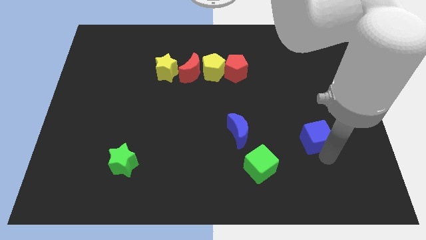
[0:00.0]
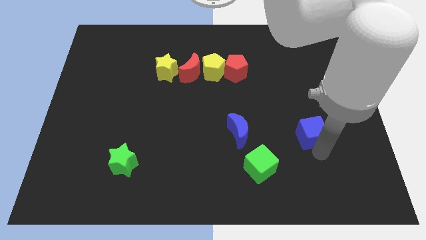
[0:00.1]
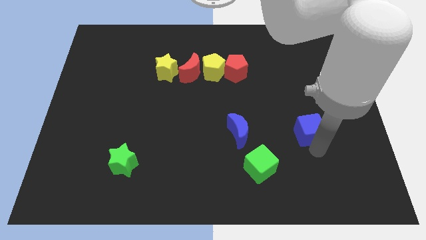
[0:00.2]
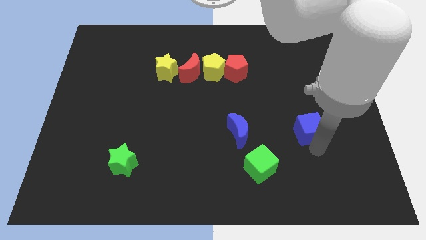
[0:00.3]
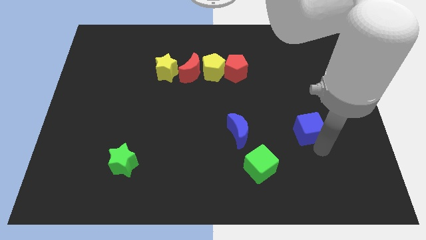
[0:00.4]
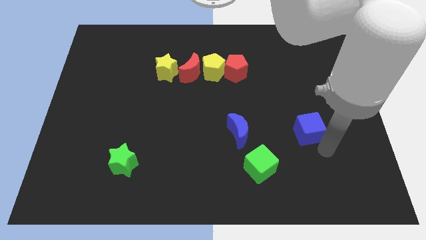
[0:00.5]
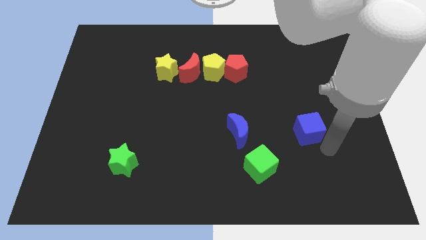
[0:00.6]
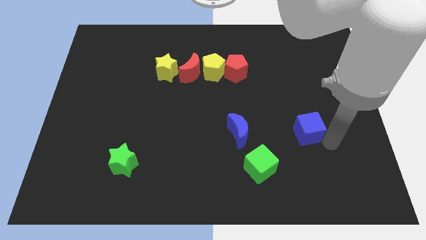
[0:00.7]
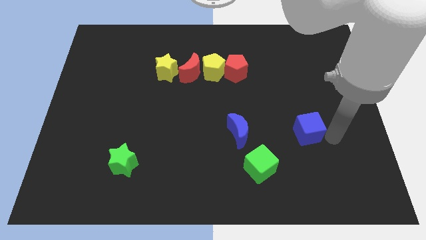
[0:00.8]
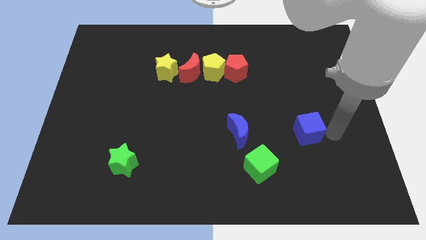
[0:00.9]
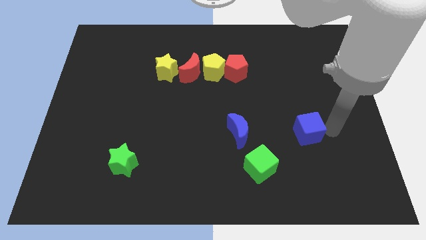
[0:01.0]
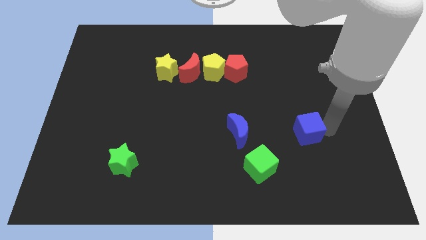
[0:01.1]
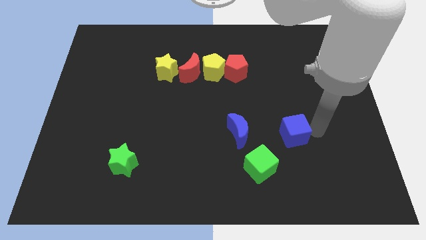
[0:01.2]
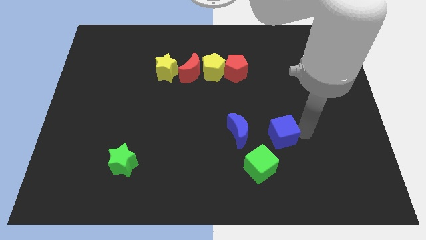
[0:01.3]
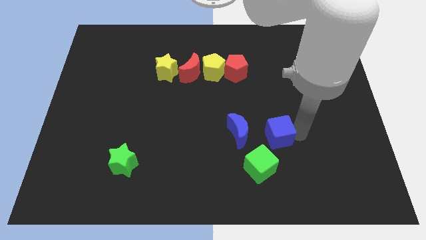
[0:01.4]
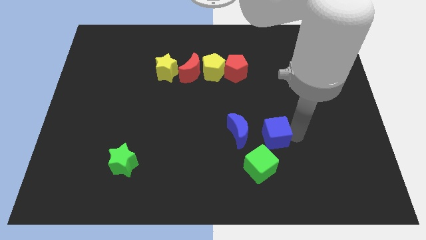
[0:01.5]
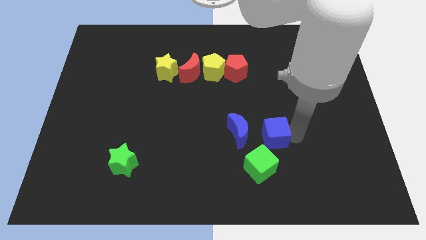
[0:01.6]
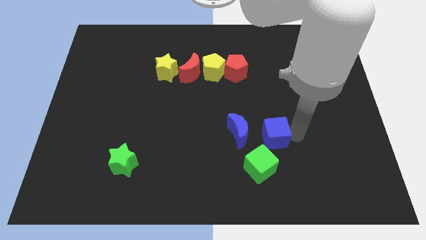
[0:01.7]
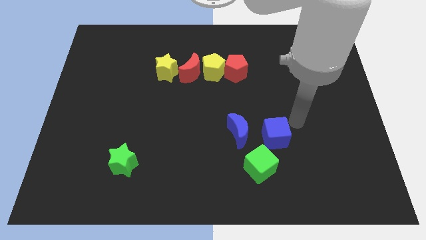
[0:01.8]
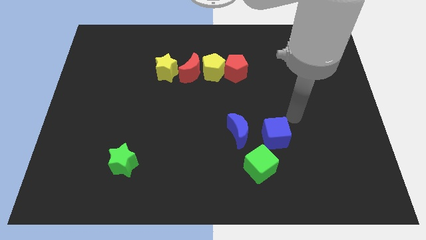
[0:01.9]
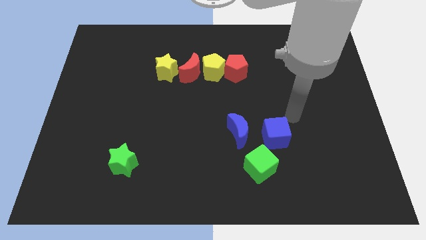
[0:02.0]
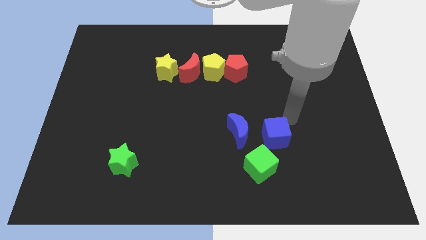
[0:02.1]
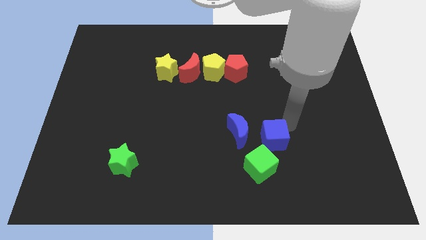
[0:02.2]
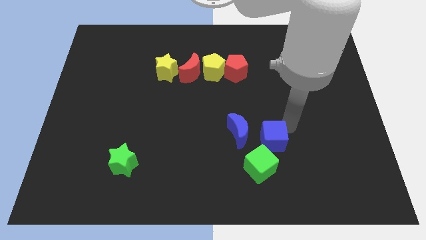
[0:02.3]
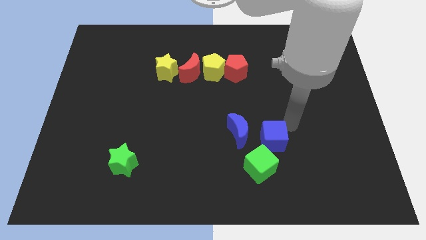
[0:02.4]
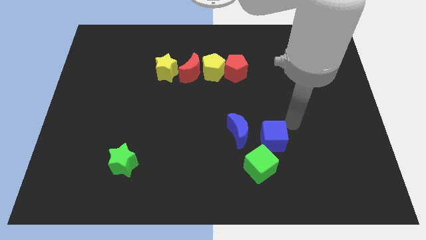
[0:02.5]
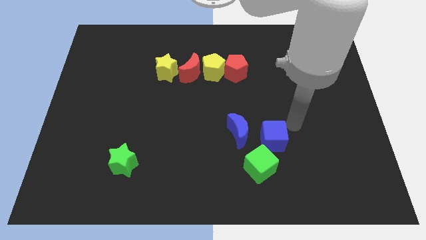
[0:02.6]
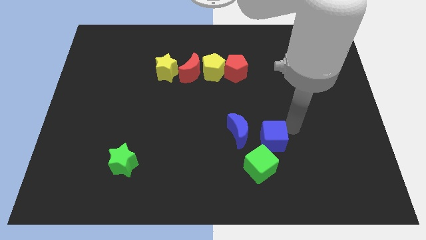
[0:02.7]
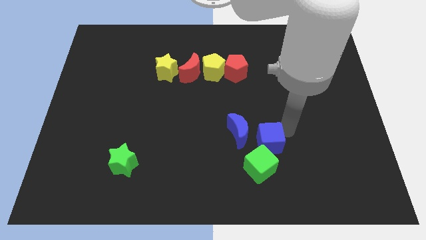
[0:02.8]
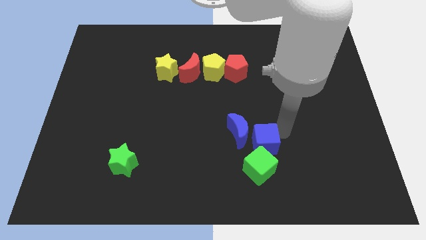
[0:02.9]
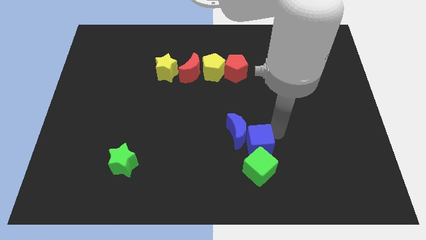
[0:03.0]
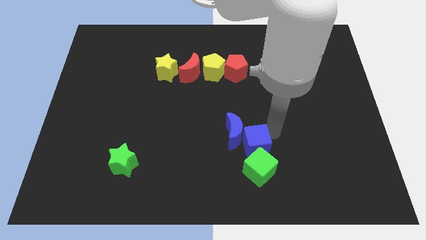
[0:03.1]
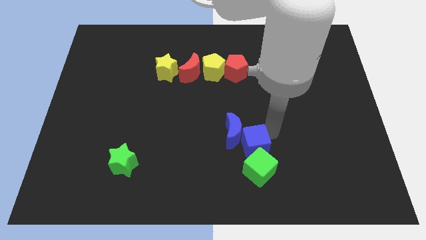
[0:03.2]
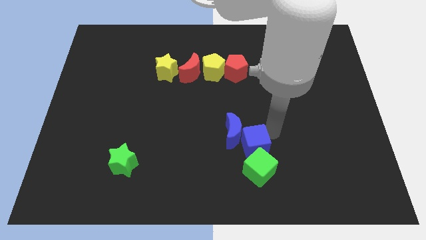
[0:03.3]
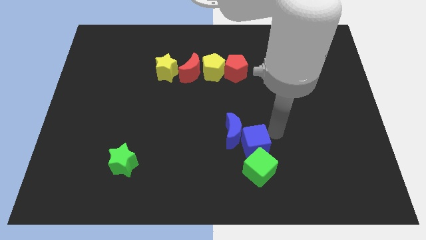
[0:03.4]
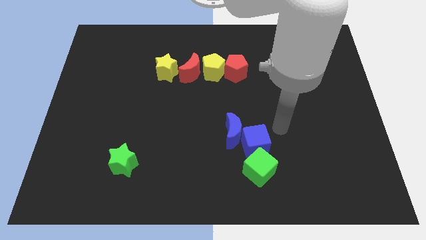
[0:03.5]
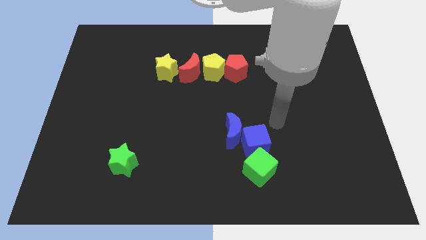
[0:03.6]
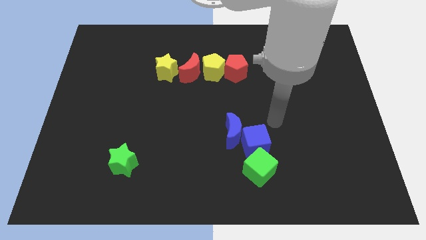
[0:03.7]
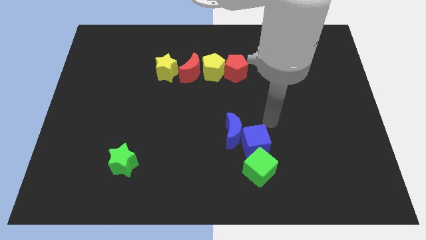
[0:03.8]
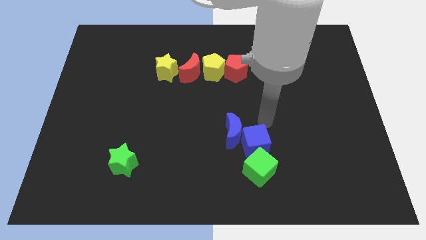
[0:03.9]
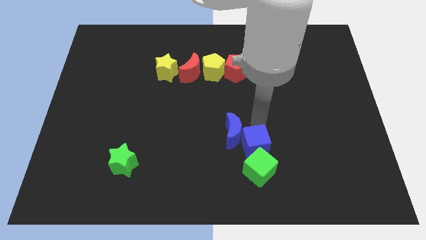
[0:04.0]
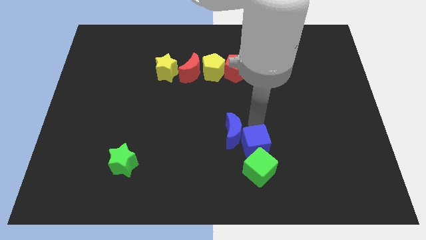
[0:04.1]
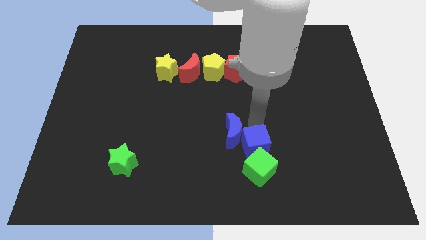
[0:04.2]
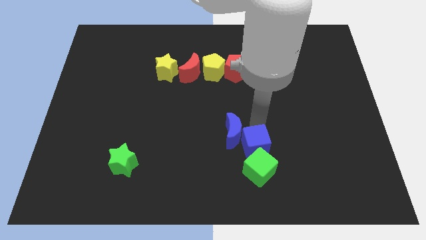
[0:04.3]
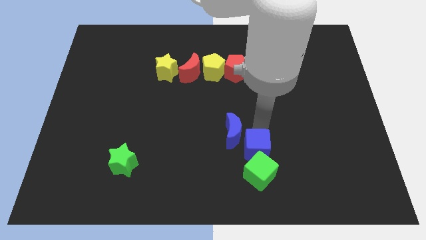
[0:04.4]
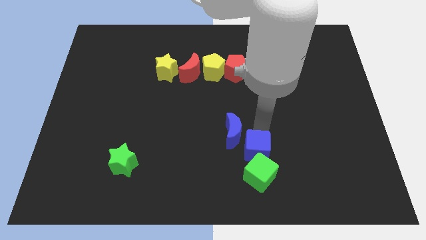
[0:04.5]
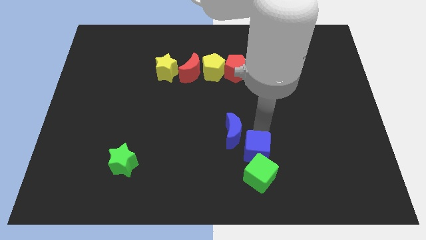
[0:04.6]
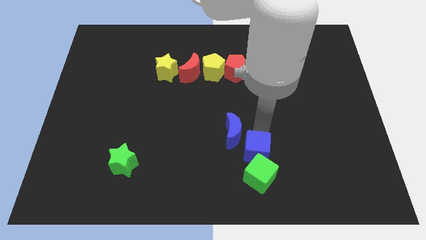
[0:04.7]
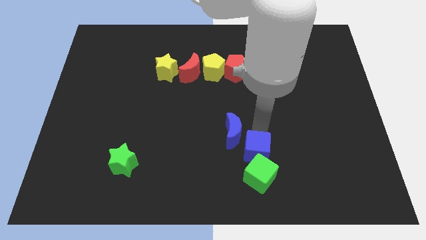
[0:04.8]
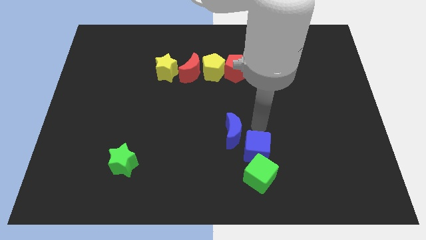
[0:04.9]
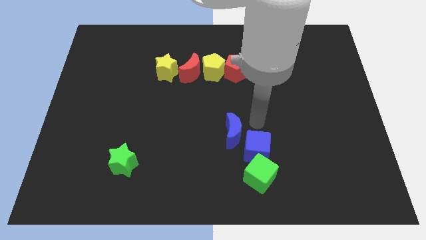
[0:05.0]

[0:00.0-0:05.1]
attach the blue cube to blue moon and green star

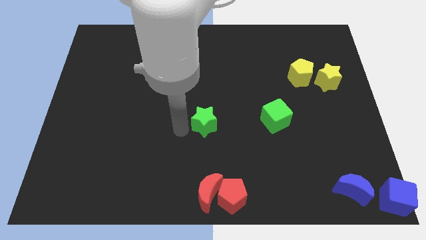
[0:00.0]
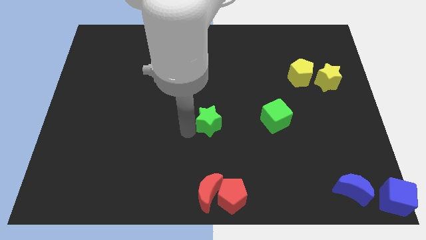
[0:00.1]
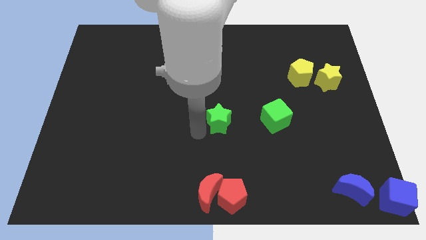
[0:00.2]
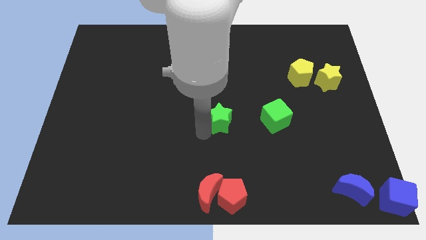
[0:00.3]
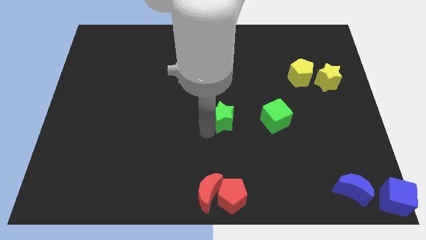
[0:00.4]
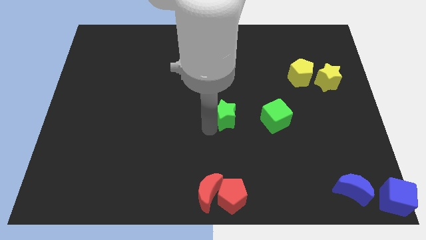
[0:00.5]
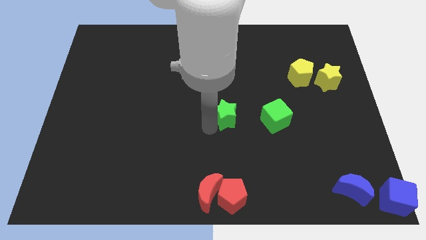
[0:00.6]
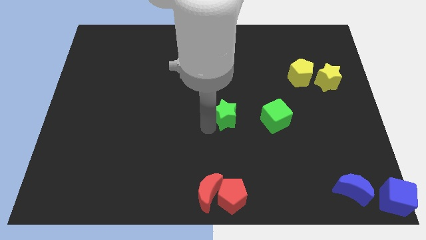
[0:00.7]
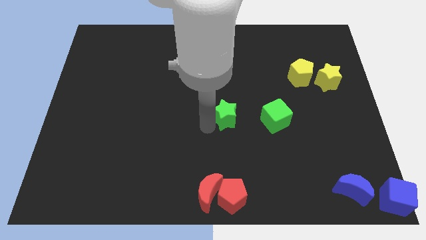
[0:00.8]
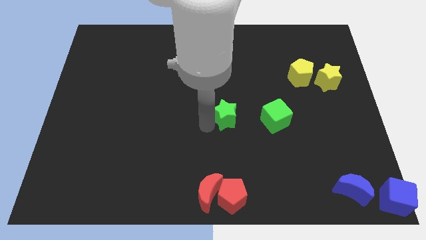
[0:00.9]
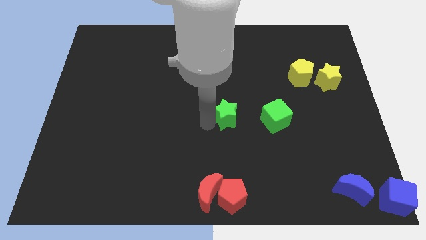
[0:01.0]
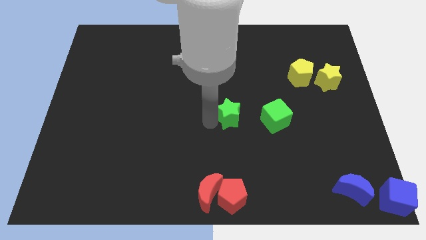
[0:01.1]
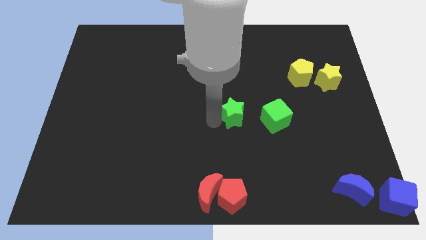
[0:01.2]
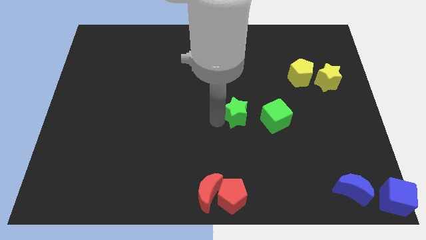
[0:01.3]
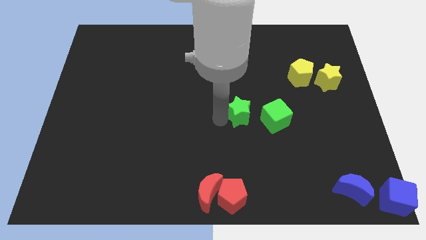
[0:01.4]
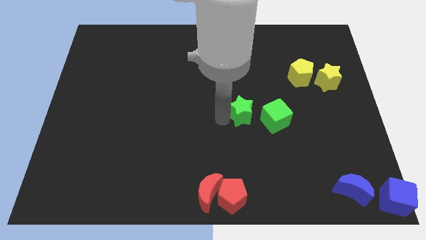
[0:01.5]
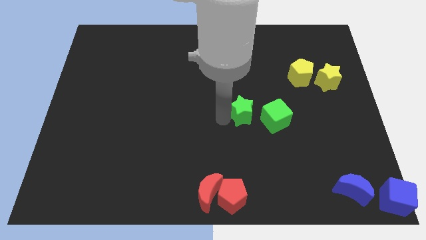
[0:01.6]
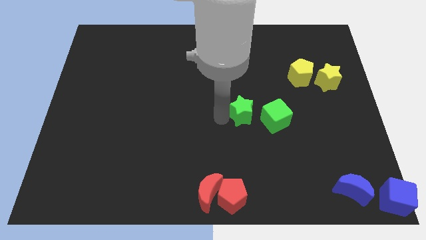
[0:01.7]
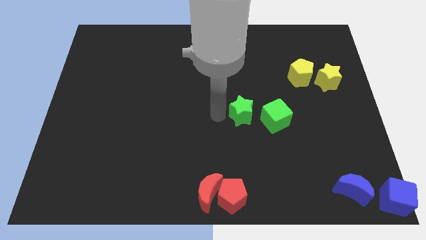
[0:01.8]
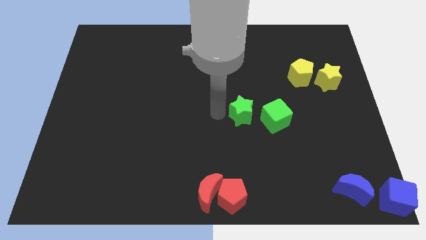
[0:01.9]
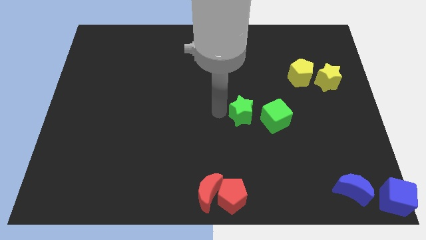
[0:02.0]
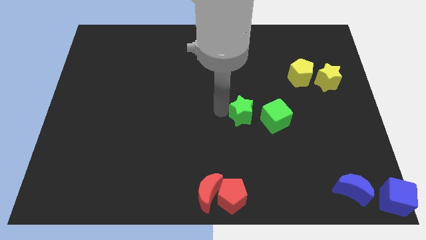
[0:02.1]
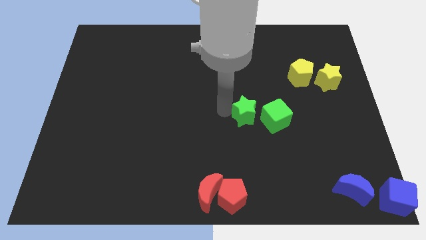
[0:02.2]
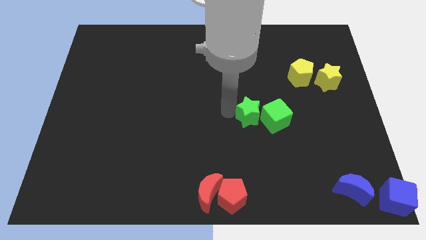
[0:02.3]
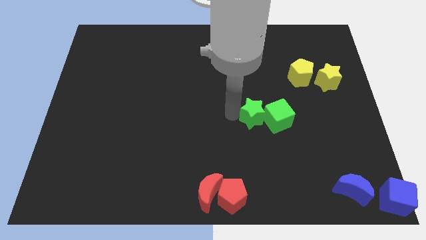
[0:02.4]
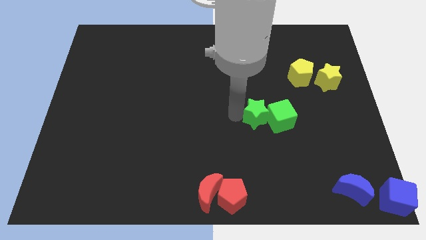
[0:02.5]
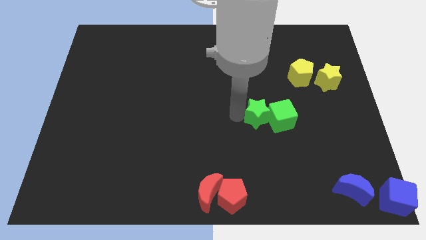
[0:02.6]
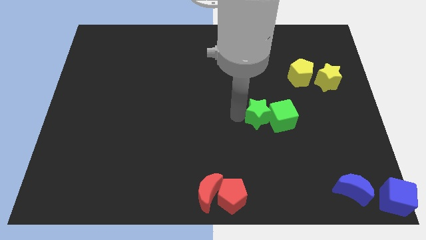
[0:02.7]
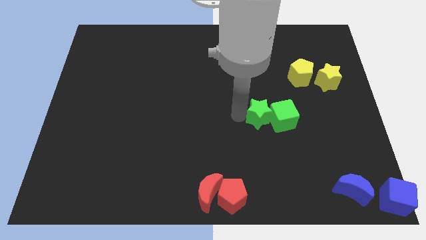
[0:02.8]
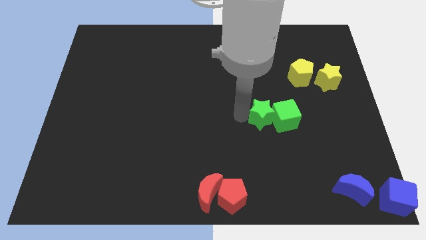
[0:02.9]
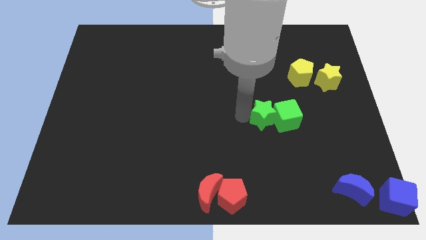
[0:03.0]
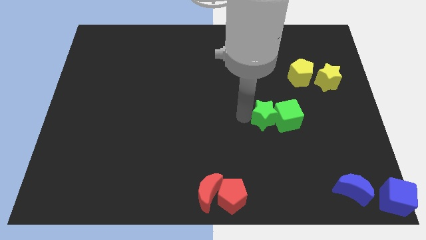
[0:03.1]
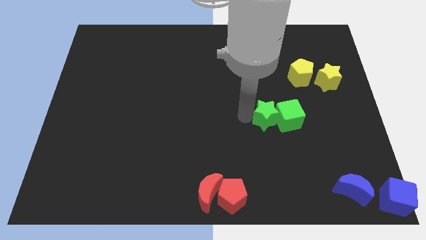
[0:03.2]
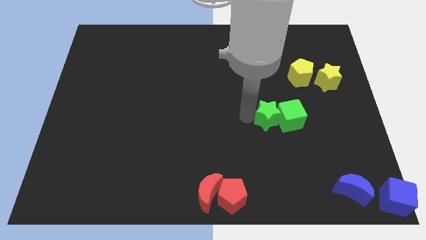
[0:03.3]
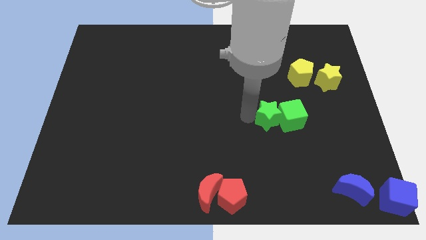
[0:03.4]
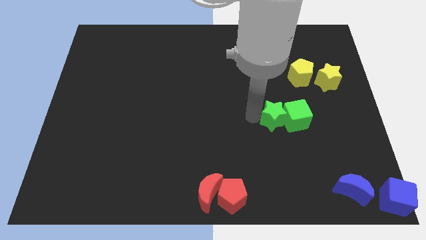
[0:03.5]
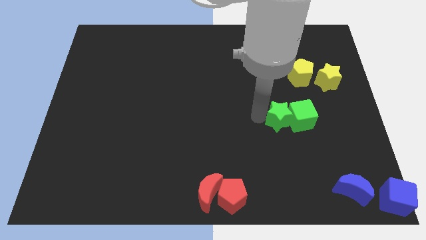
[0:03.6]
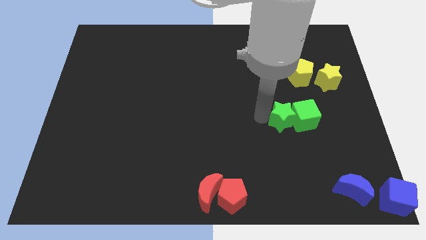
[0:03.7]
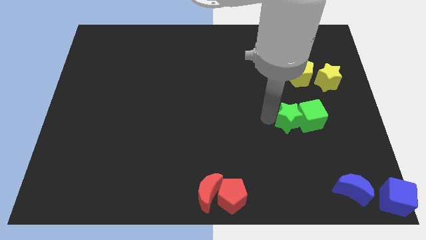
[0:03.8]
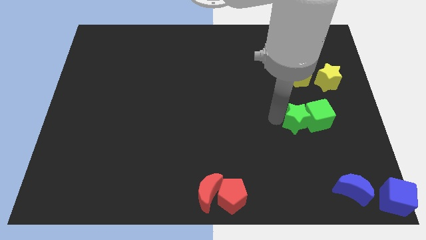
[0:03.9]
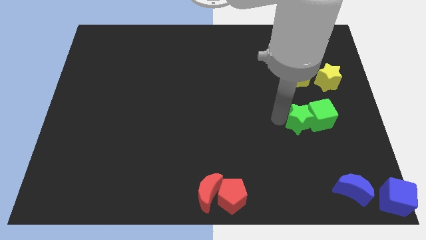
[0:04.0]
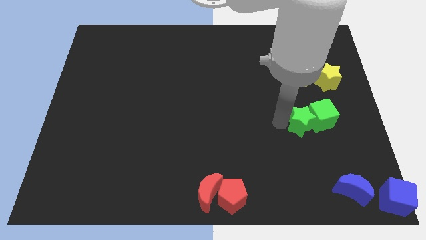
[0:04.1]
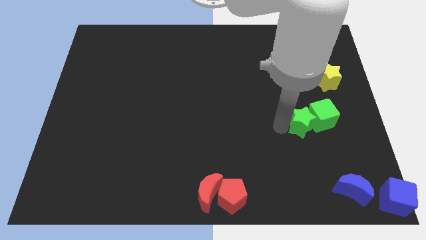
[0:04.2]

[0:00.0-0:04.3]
push green star along with green cube to the bottom of yellow blocks
